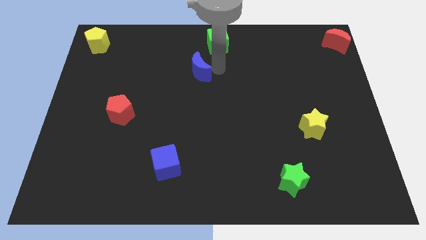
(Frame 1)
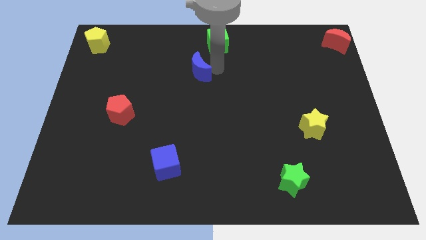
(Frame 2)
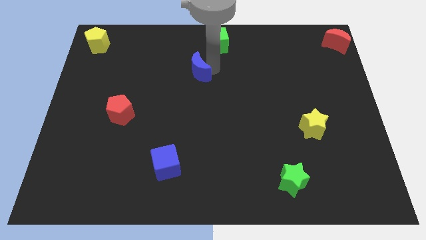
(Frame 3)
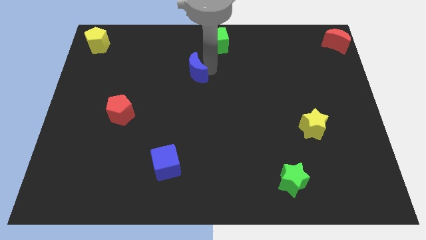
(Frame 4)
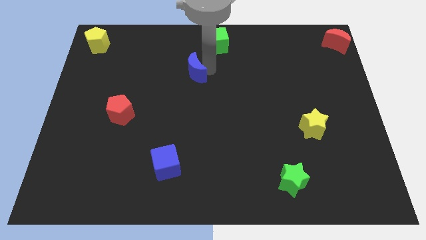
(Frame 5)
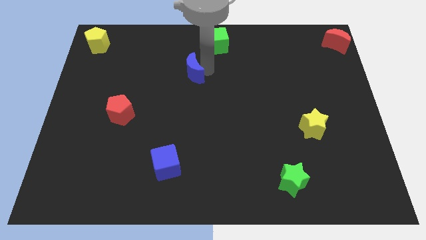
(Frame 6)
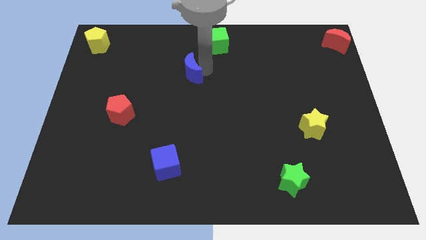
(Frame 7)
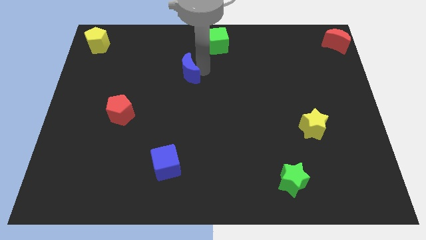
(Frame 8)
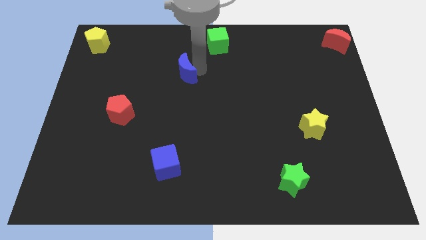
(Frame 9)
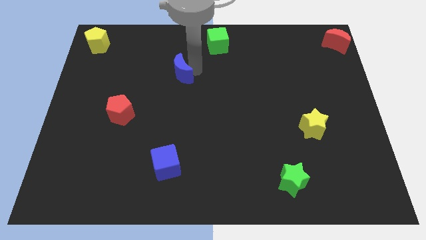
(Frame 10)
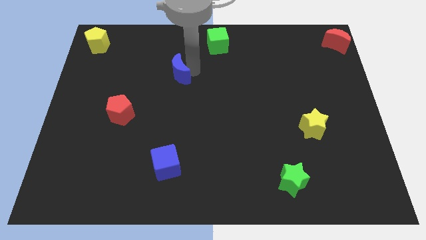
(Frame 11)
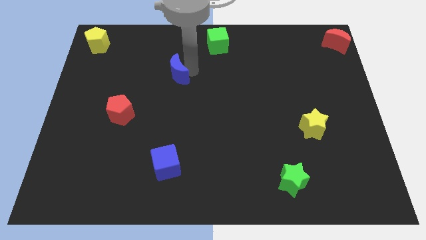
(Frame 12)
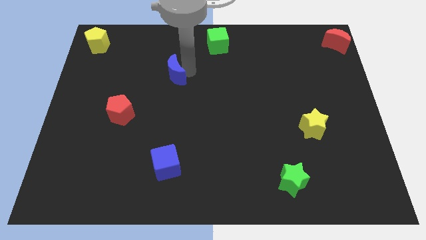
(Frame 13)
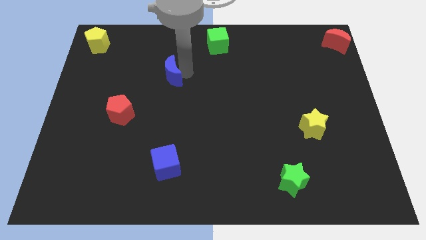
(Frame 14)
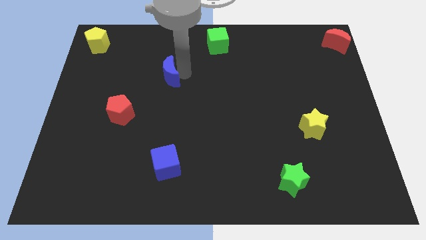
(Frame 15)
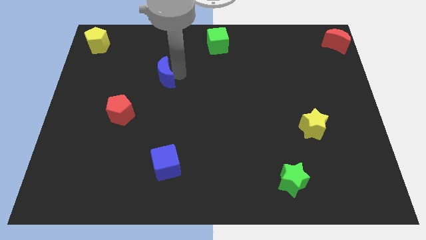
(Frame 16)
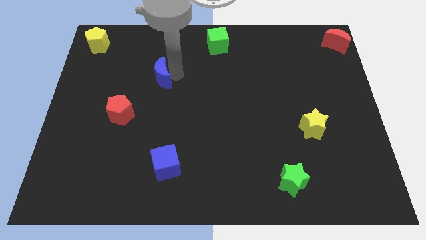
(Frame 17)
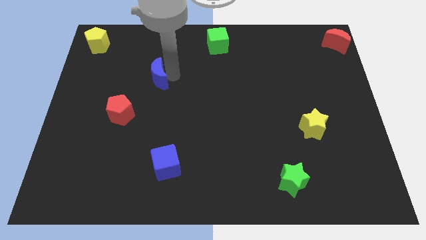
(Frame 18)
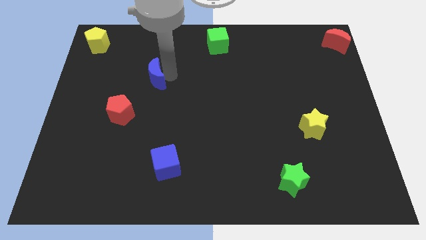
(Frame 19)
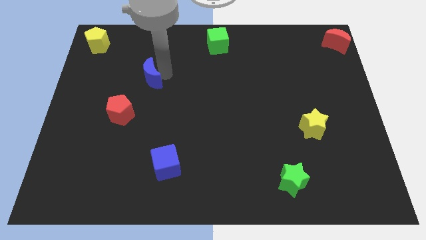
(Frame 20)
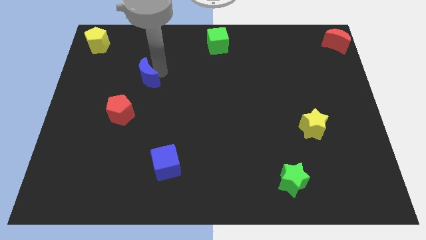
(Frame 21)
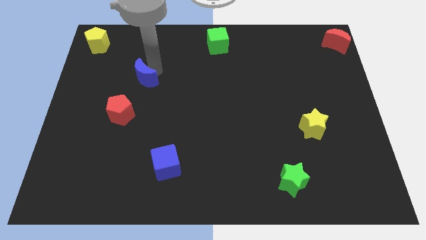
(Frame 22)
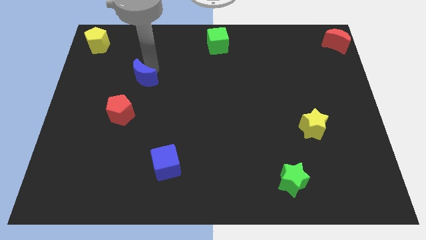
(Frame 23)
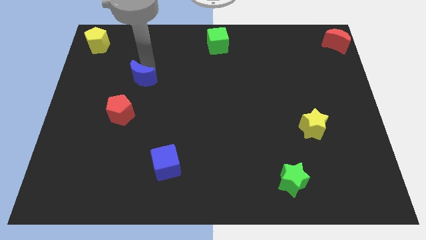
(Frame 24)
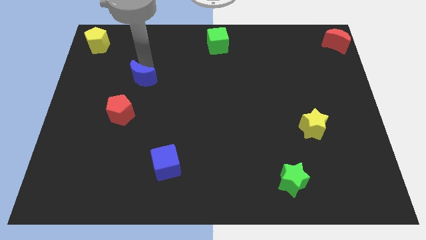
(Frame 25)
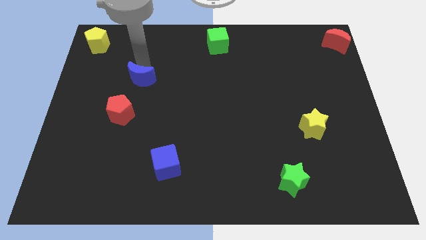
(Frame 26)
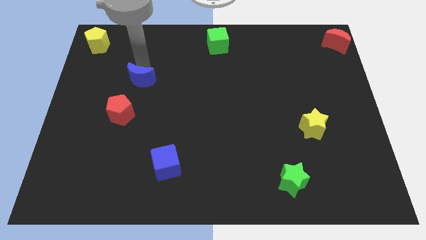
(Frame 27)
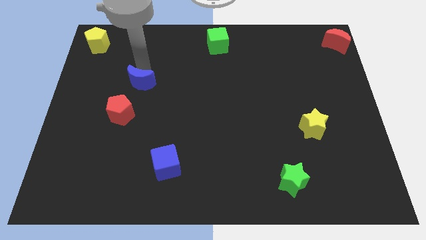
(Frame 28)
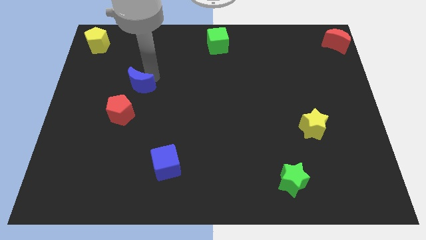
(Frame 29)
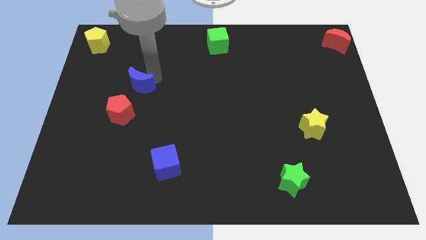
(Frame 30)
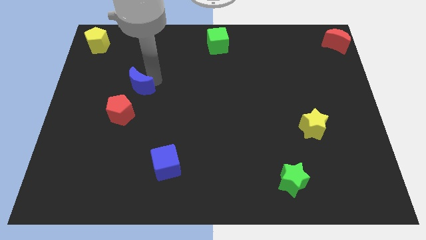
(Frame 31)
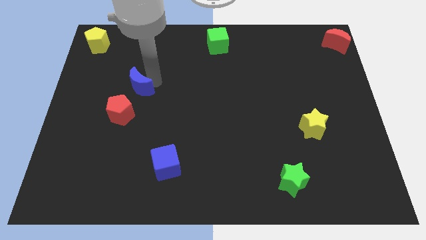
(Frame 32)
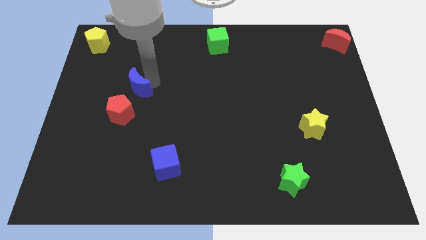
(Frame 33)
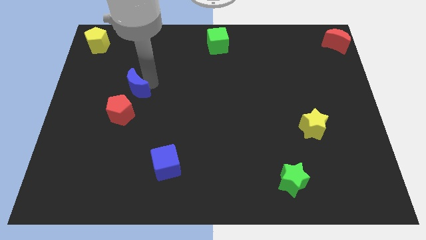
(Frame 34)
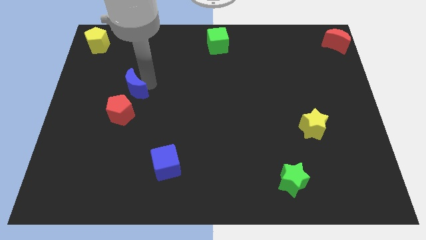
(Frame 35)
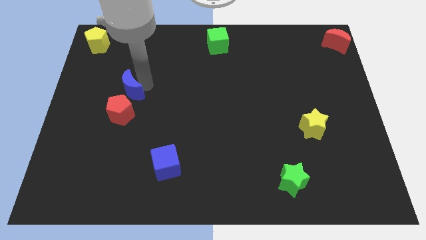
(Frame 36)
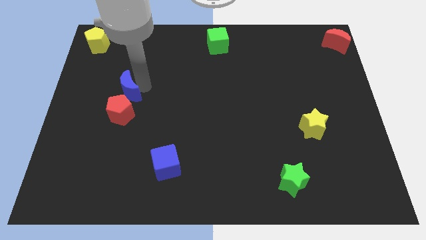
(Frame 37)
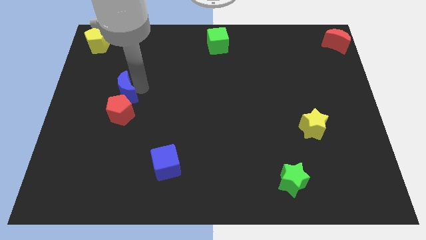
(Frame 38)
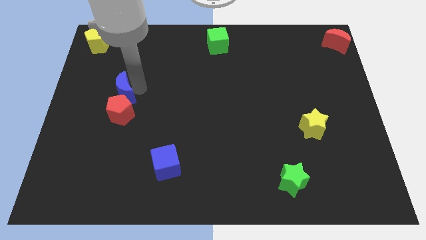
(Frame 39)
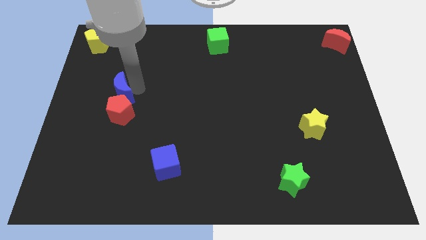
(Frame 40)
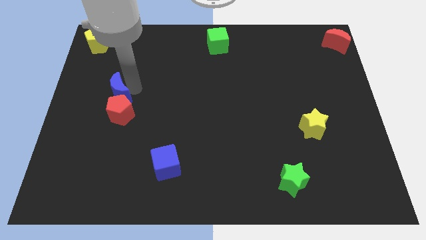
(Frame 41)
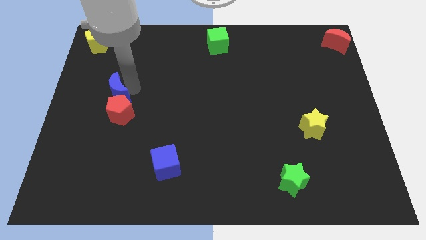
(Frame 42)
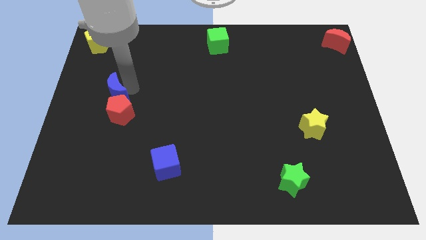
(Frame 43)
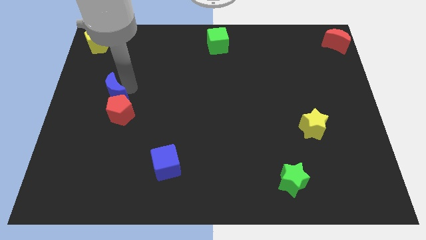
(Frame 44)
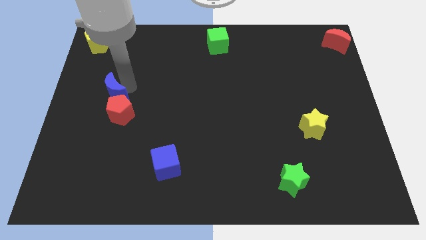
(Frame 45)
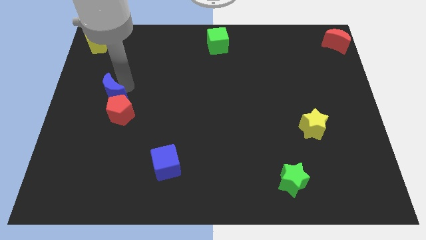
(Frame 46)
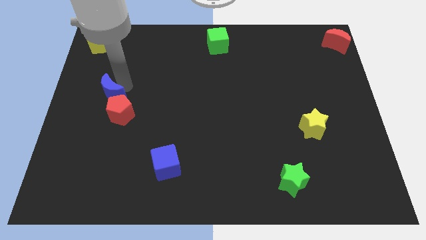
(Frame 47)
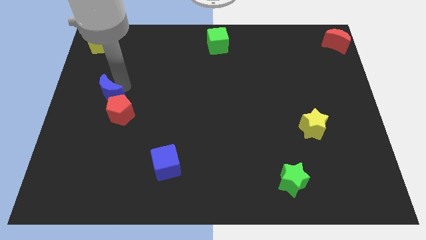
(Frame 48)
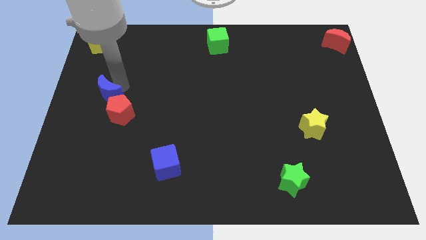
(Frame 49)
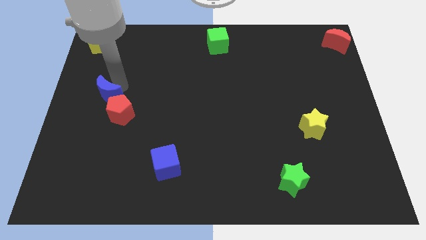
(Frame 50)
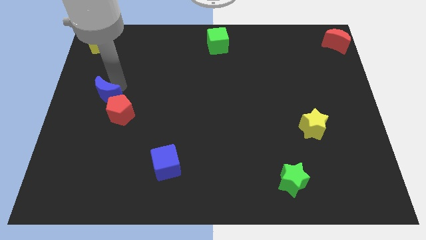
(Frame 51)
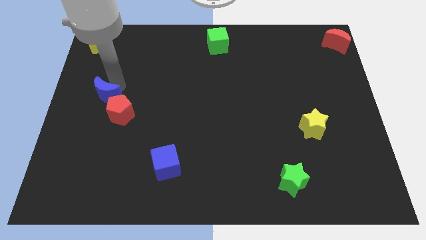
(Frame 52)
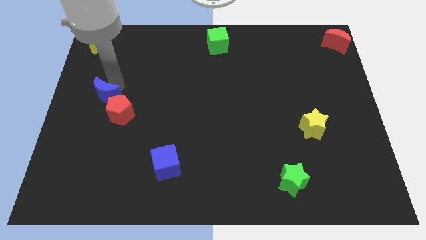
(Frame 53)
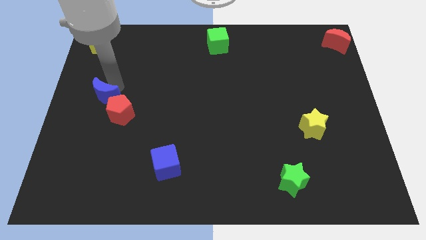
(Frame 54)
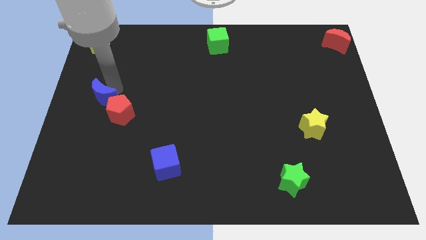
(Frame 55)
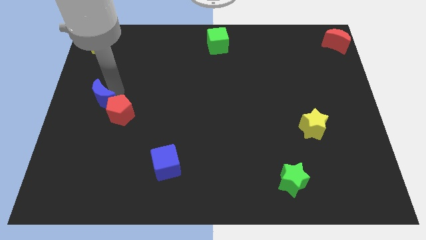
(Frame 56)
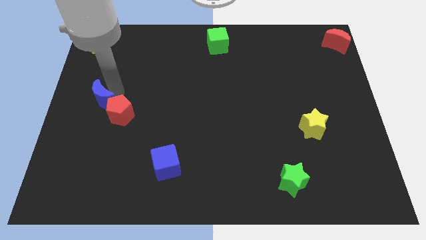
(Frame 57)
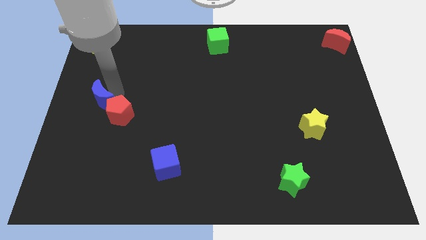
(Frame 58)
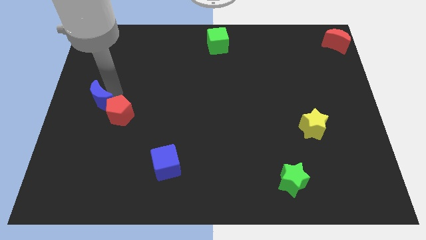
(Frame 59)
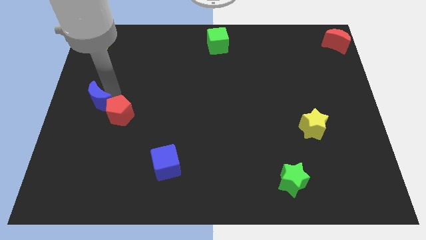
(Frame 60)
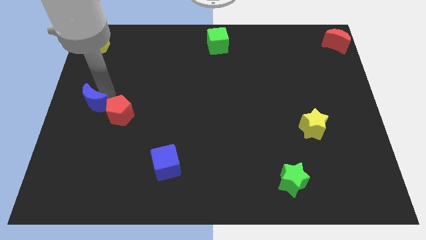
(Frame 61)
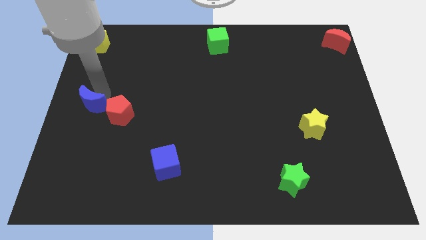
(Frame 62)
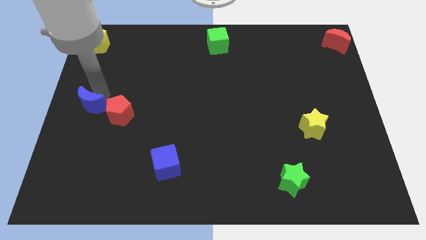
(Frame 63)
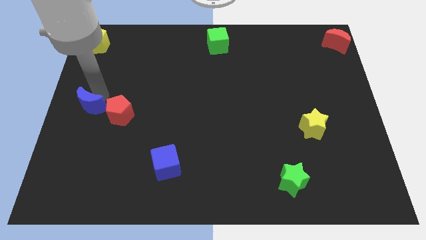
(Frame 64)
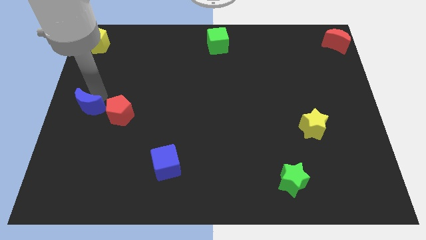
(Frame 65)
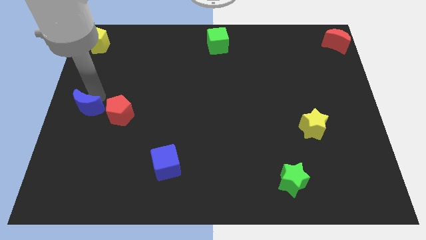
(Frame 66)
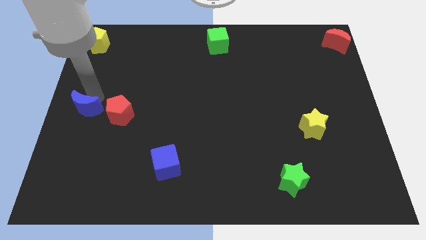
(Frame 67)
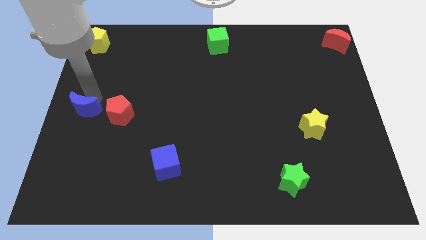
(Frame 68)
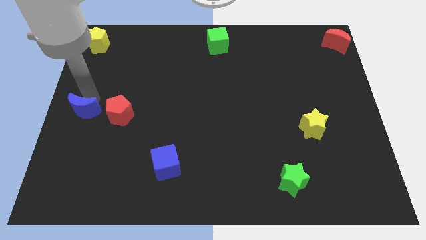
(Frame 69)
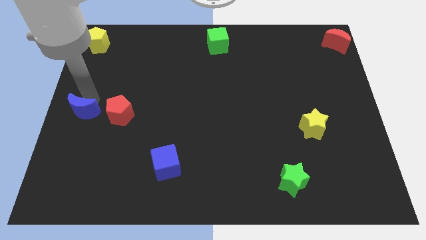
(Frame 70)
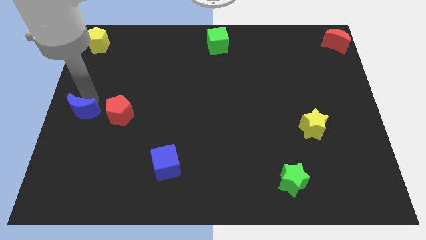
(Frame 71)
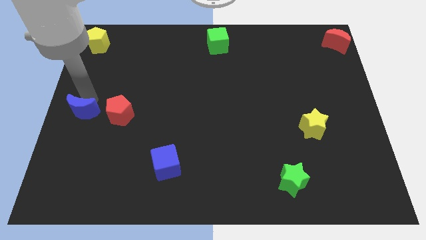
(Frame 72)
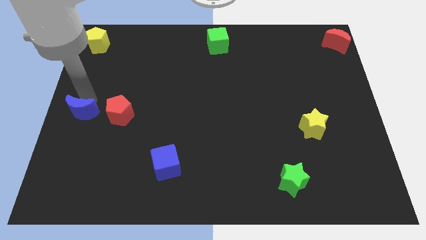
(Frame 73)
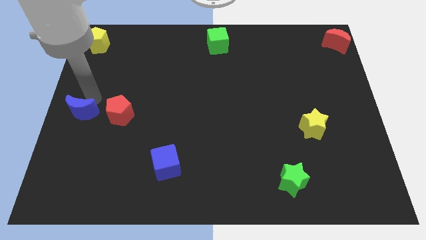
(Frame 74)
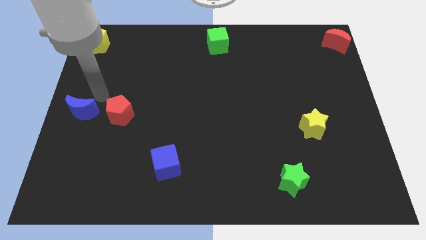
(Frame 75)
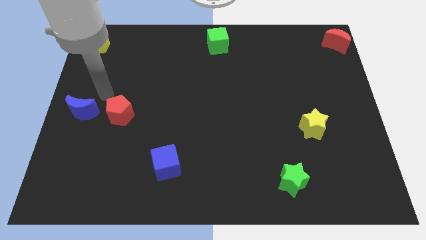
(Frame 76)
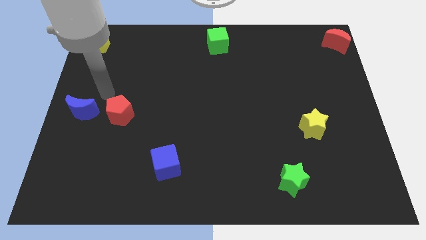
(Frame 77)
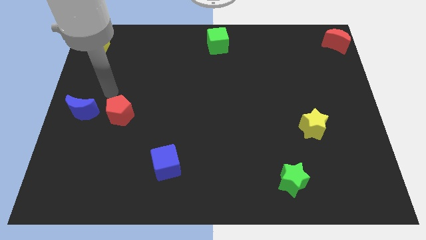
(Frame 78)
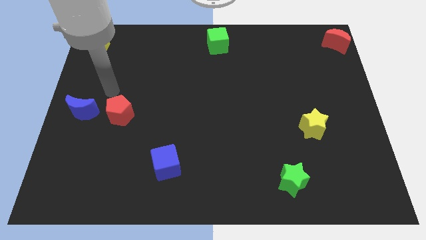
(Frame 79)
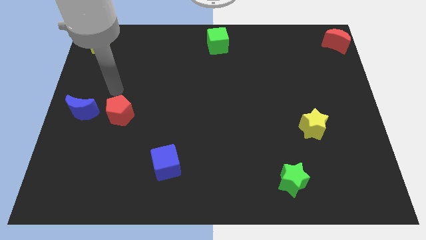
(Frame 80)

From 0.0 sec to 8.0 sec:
push the blue moon to the center left

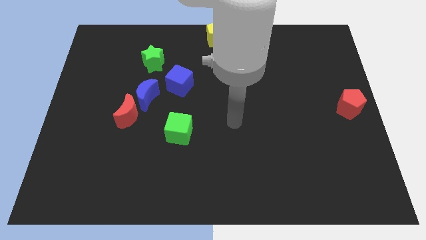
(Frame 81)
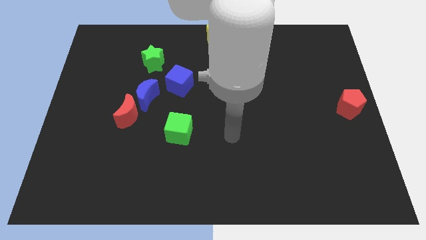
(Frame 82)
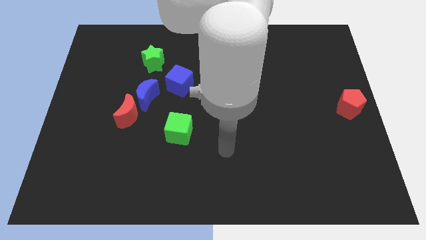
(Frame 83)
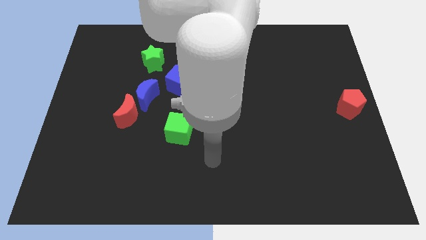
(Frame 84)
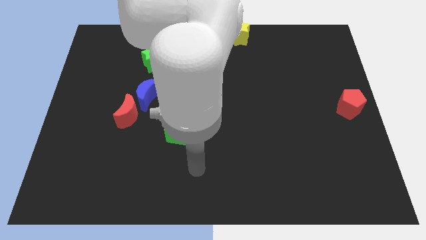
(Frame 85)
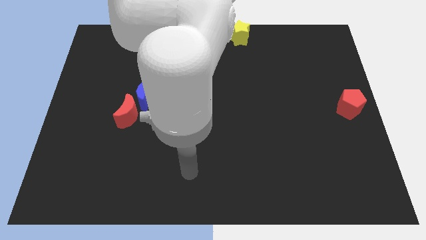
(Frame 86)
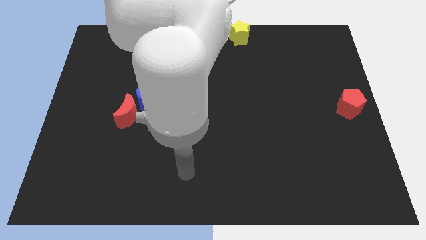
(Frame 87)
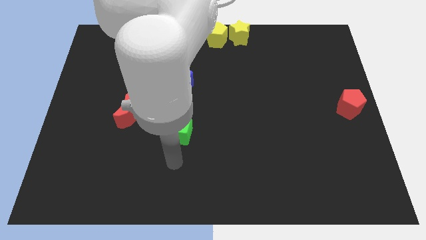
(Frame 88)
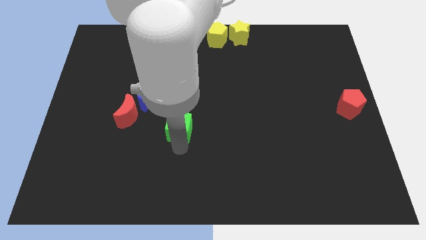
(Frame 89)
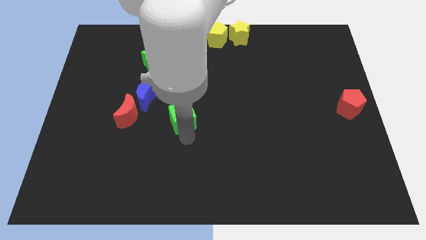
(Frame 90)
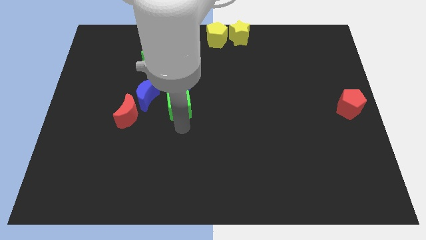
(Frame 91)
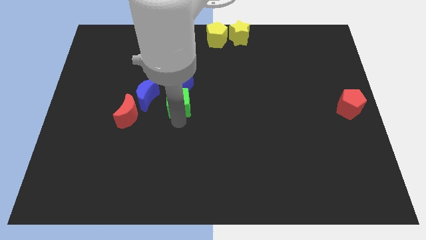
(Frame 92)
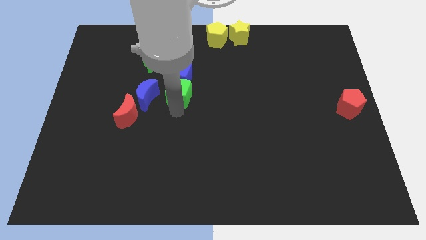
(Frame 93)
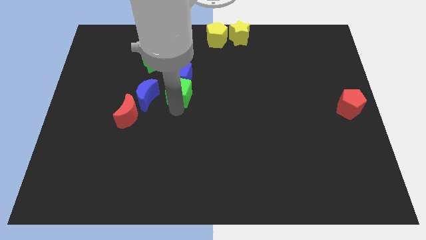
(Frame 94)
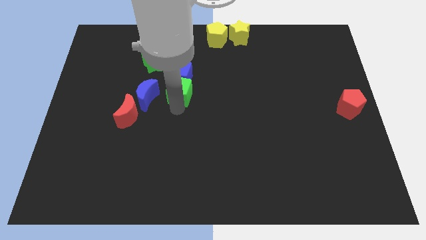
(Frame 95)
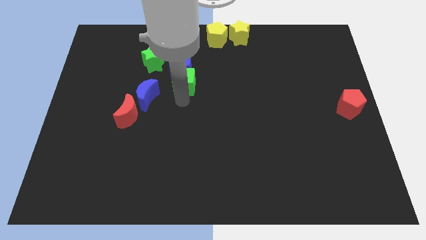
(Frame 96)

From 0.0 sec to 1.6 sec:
slide the green cube into the blue cube
